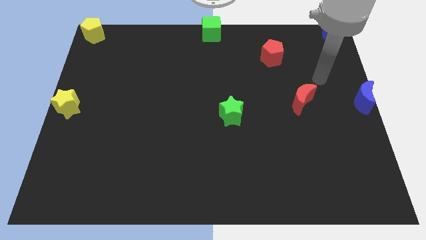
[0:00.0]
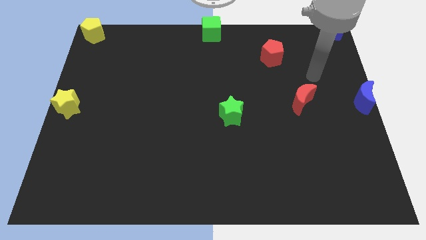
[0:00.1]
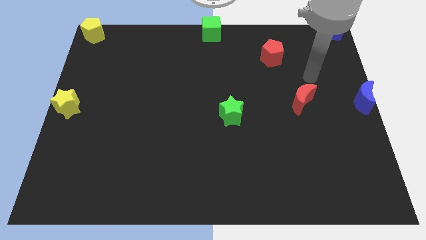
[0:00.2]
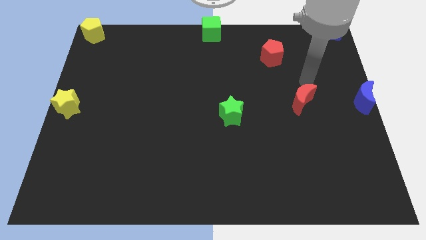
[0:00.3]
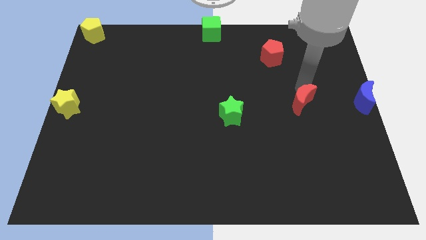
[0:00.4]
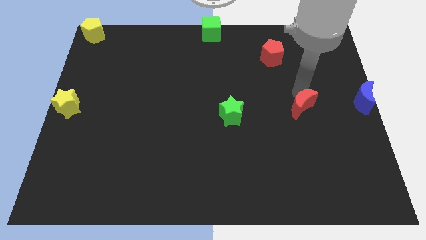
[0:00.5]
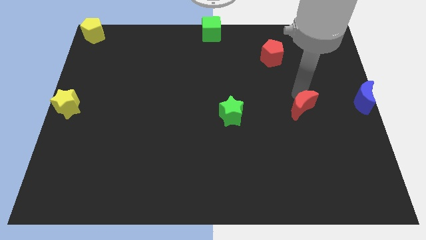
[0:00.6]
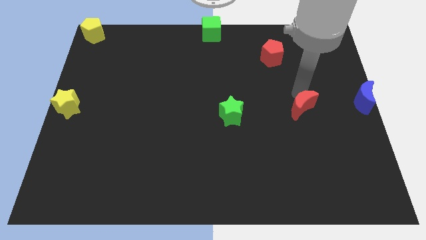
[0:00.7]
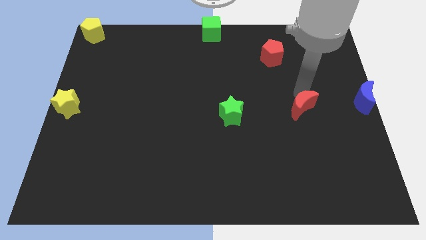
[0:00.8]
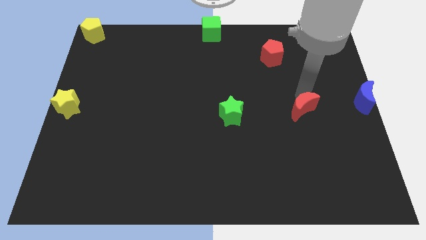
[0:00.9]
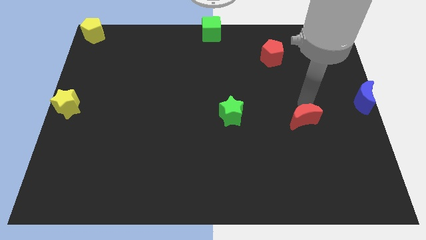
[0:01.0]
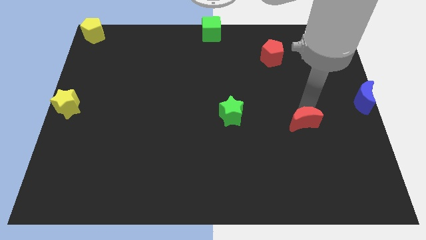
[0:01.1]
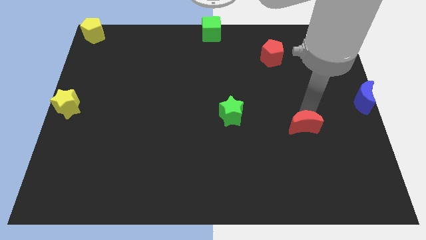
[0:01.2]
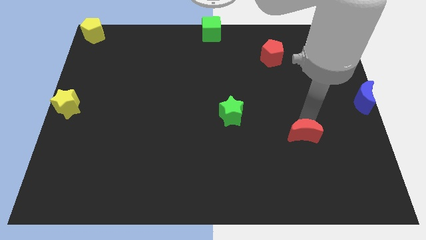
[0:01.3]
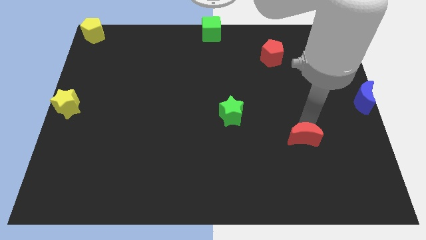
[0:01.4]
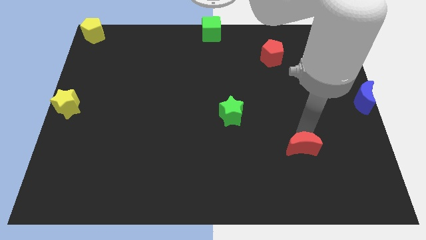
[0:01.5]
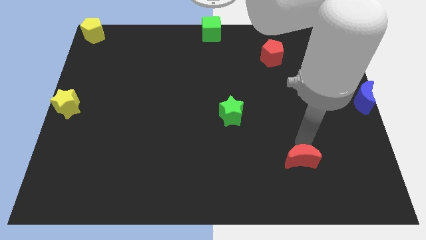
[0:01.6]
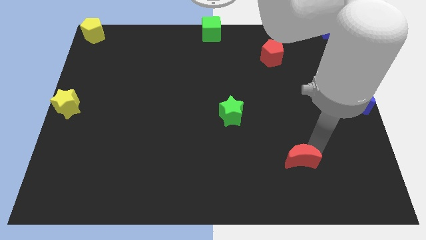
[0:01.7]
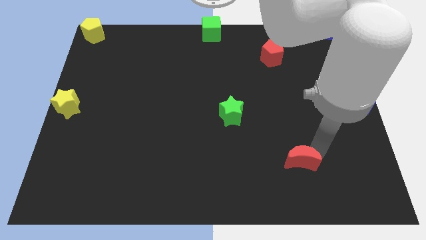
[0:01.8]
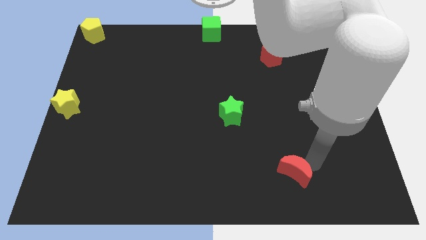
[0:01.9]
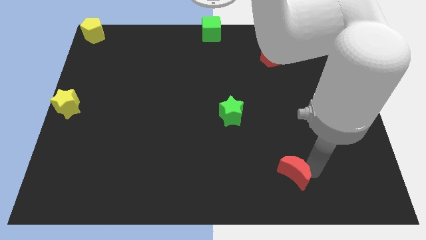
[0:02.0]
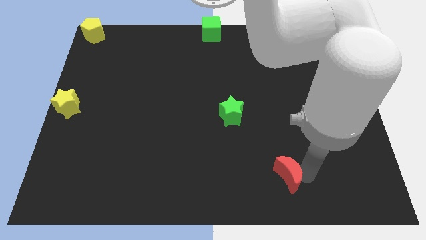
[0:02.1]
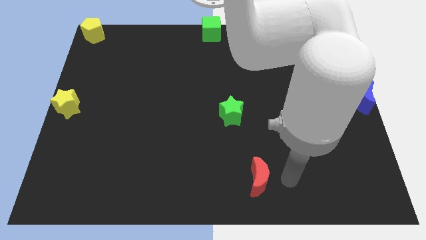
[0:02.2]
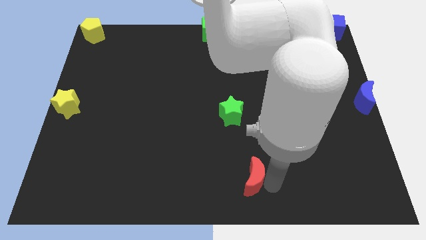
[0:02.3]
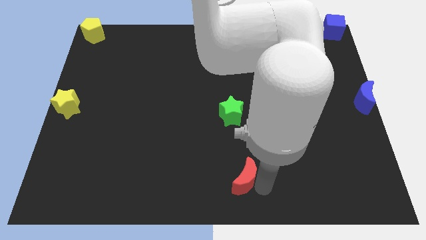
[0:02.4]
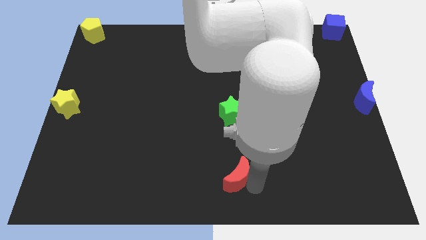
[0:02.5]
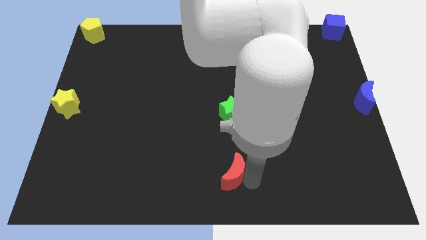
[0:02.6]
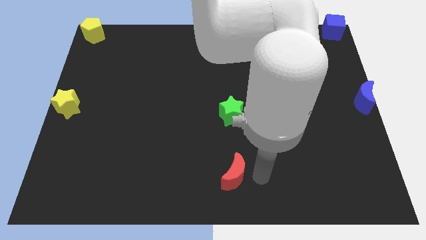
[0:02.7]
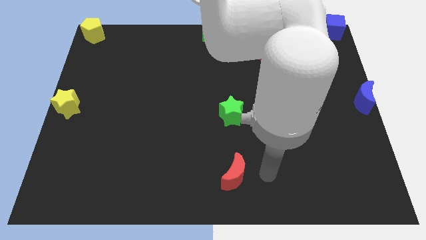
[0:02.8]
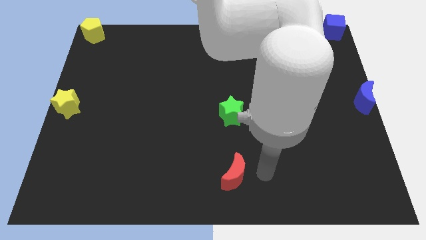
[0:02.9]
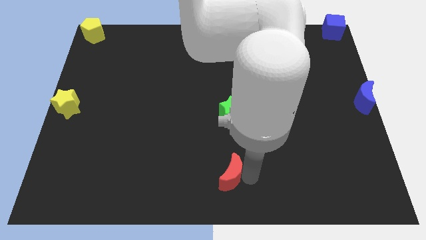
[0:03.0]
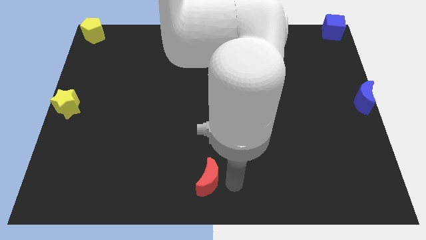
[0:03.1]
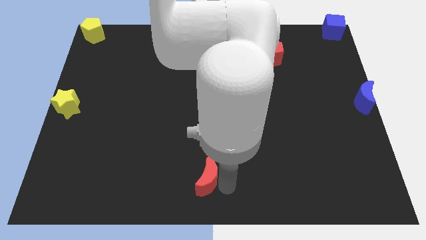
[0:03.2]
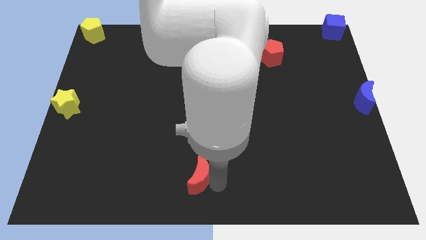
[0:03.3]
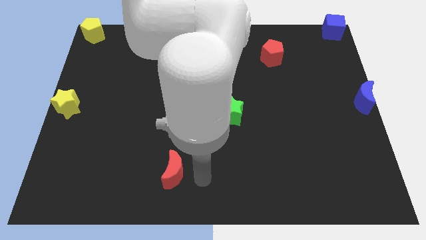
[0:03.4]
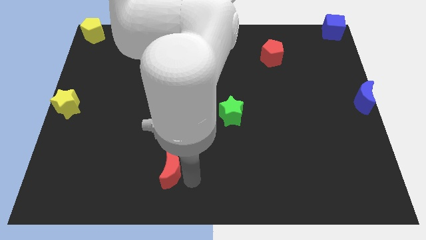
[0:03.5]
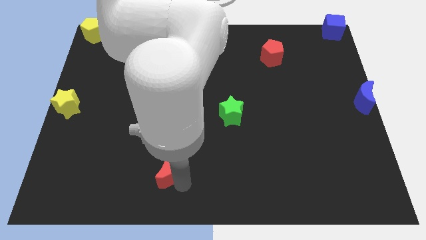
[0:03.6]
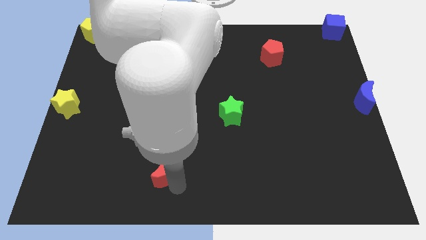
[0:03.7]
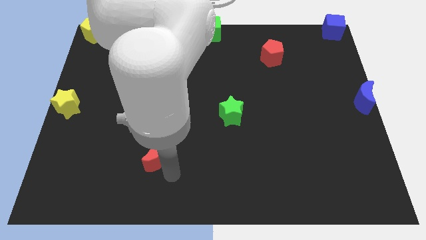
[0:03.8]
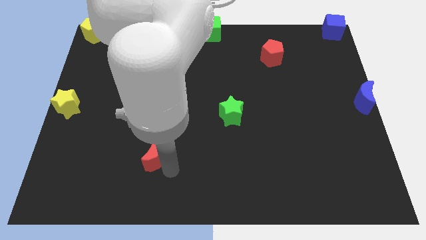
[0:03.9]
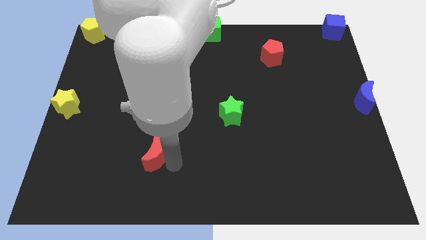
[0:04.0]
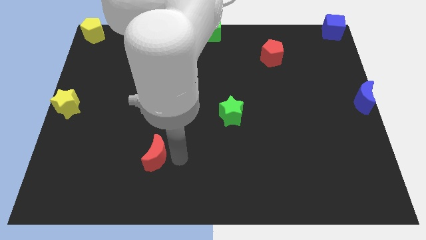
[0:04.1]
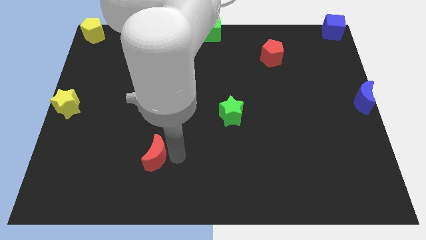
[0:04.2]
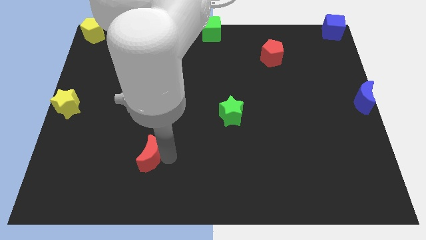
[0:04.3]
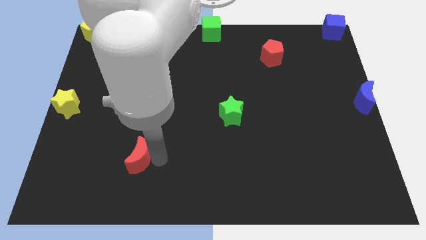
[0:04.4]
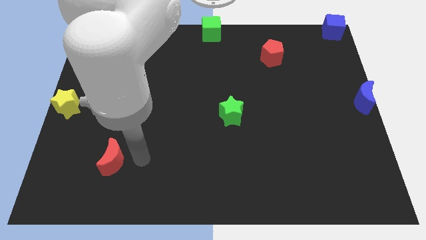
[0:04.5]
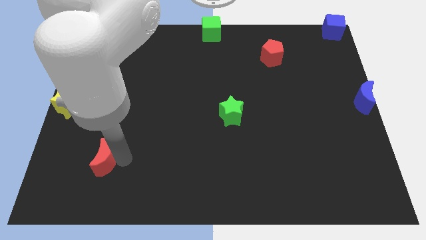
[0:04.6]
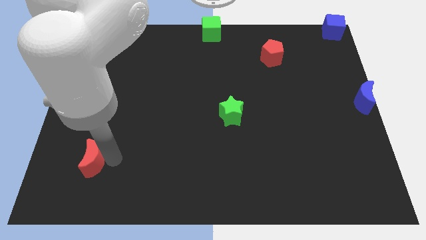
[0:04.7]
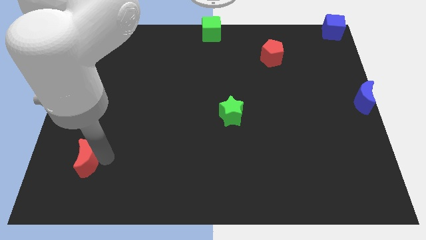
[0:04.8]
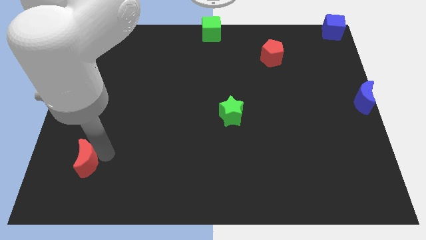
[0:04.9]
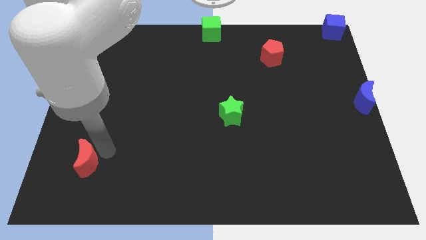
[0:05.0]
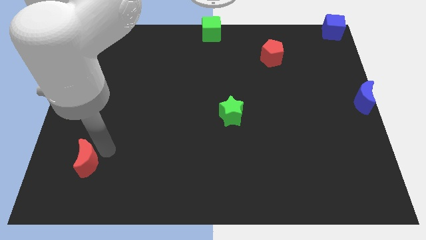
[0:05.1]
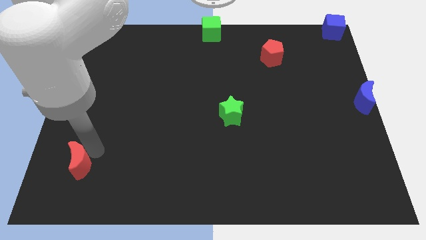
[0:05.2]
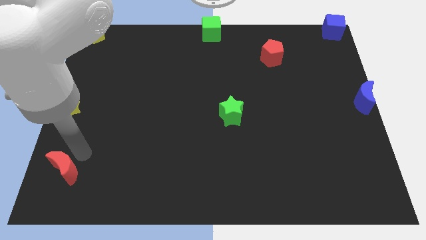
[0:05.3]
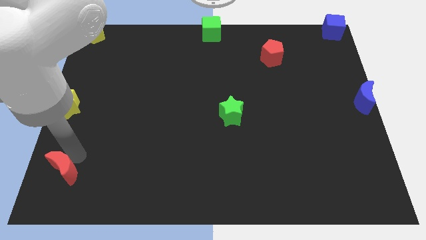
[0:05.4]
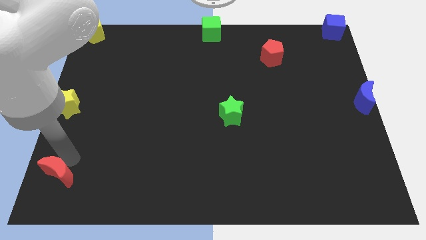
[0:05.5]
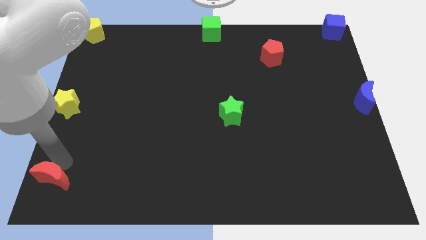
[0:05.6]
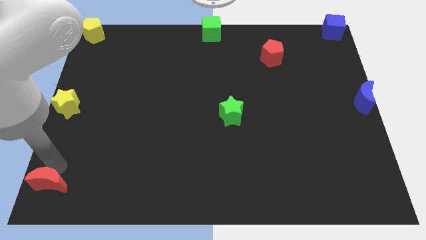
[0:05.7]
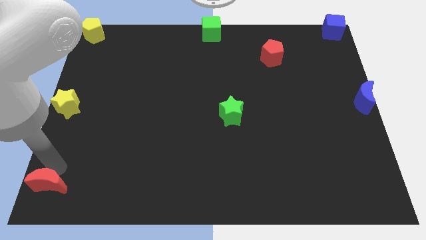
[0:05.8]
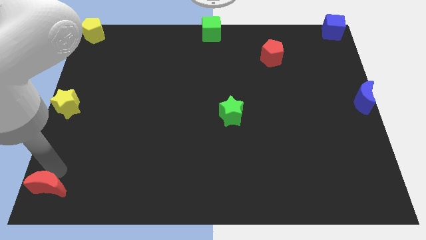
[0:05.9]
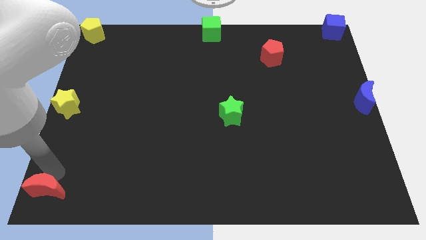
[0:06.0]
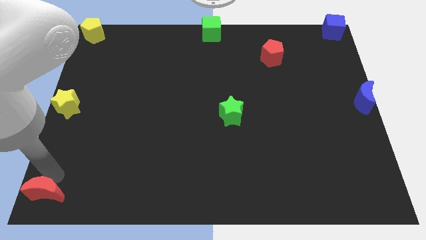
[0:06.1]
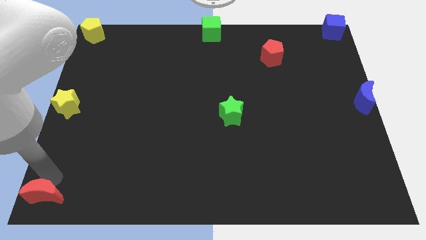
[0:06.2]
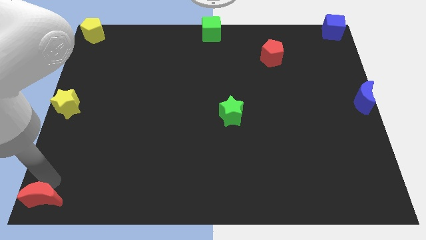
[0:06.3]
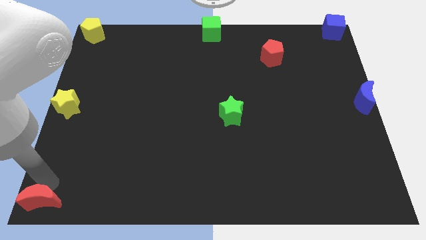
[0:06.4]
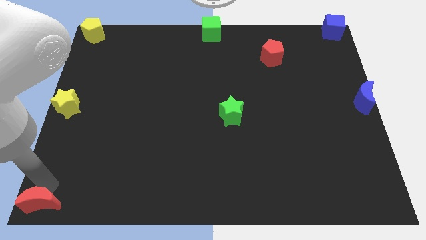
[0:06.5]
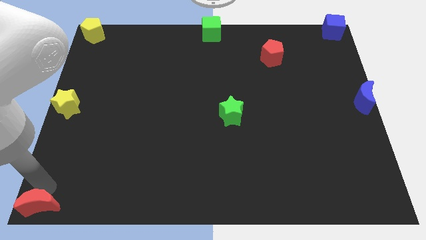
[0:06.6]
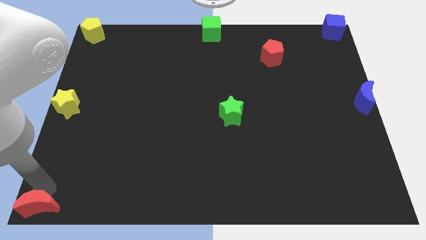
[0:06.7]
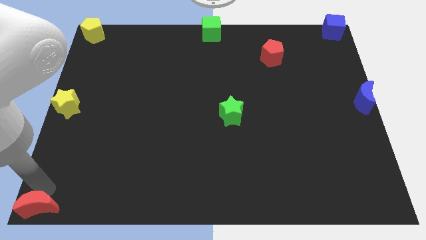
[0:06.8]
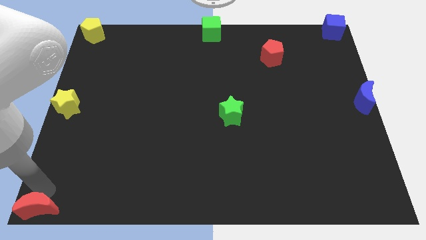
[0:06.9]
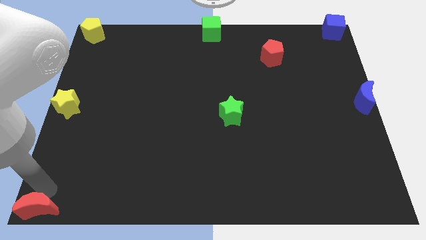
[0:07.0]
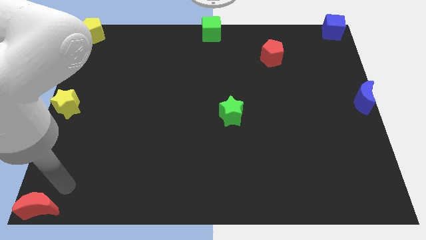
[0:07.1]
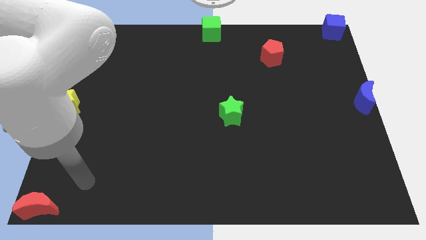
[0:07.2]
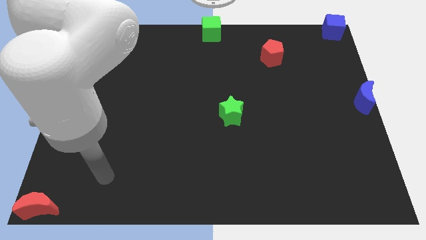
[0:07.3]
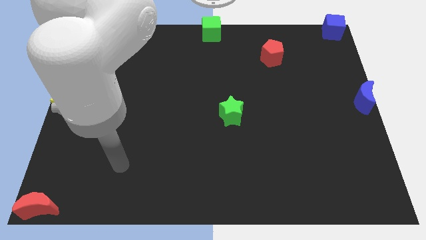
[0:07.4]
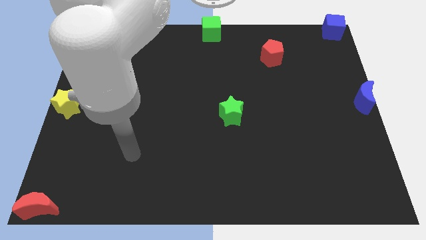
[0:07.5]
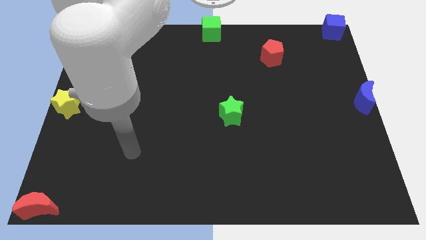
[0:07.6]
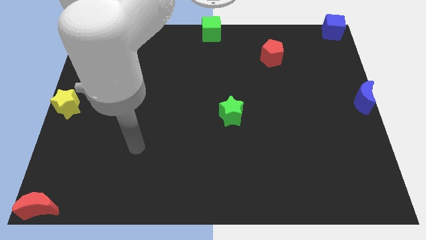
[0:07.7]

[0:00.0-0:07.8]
move the red crescent to the bottom left corner of the board

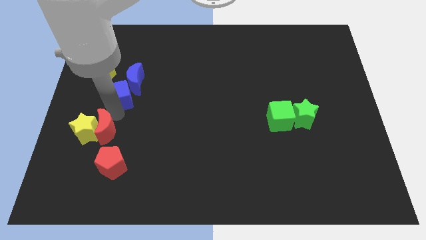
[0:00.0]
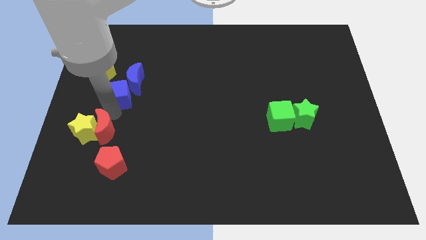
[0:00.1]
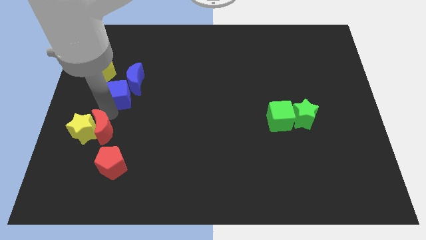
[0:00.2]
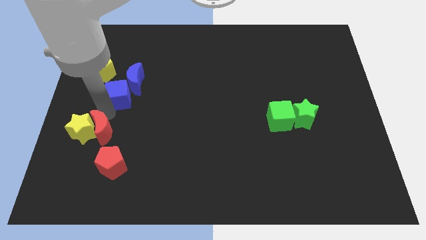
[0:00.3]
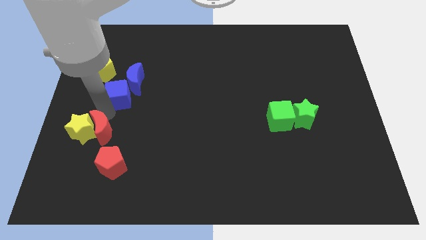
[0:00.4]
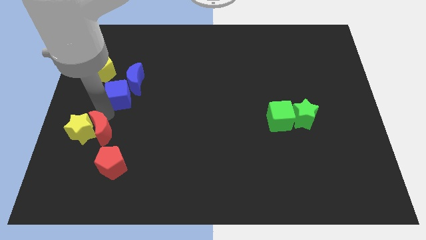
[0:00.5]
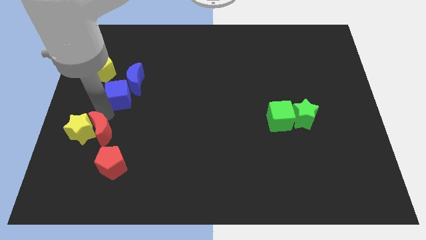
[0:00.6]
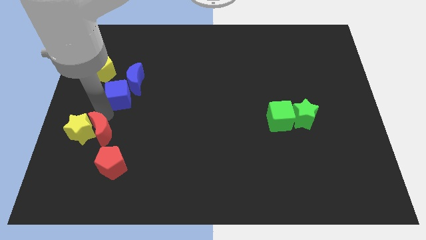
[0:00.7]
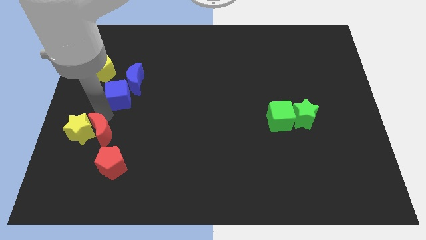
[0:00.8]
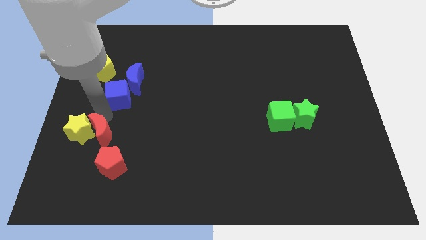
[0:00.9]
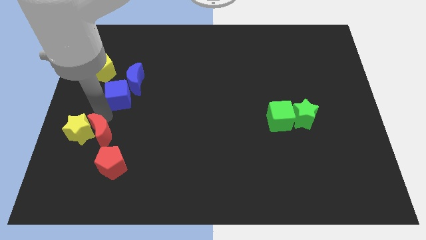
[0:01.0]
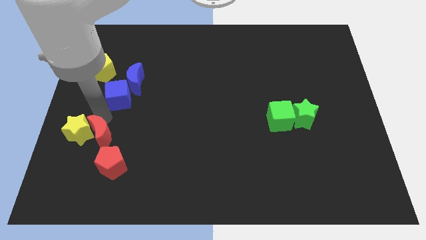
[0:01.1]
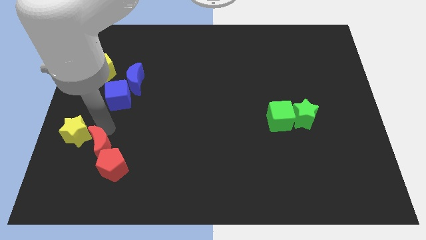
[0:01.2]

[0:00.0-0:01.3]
push the red crescent into the yellow star
